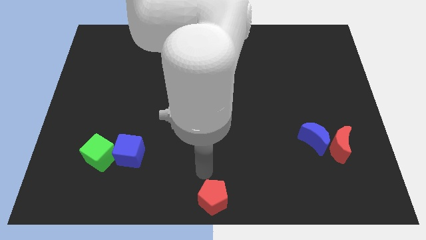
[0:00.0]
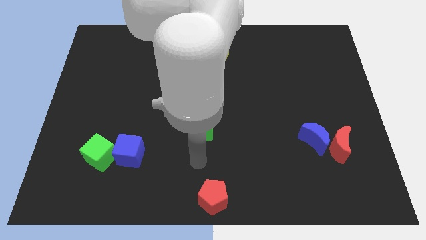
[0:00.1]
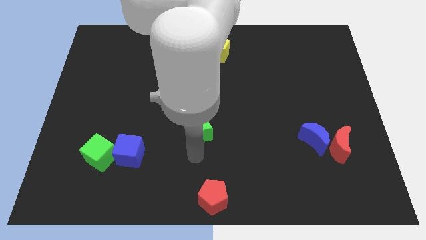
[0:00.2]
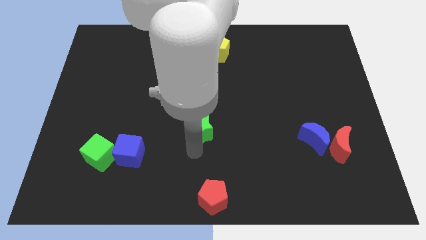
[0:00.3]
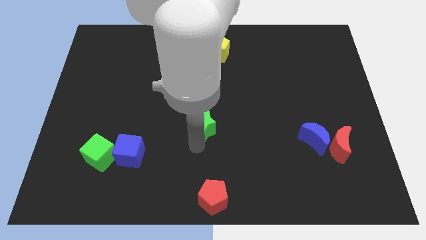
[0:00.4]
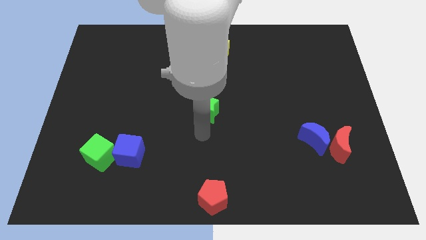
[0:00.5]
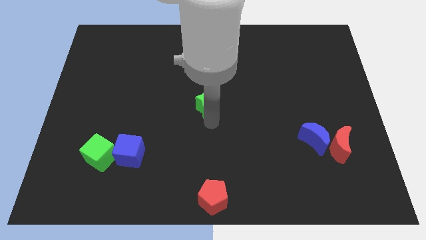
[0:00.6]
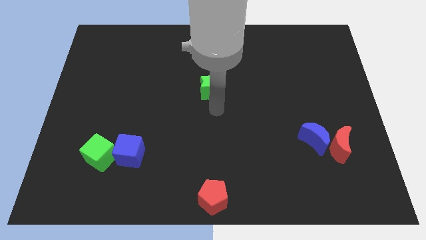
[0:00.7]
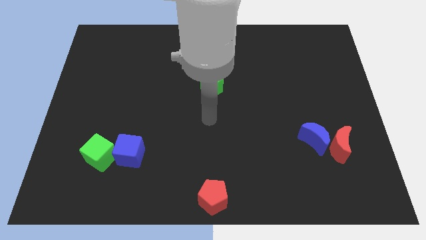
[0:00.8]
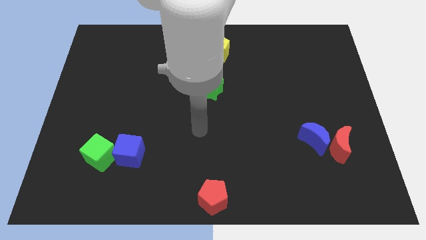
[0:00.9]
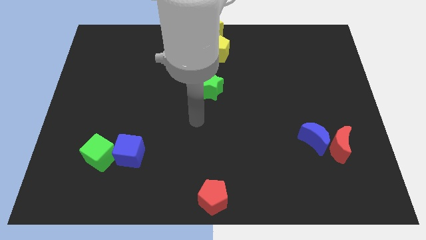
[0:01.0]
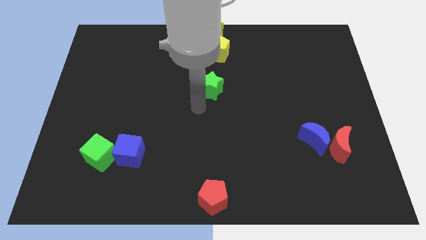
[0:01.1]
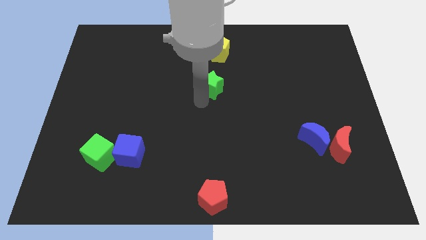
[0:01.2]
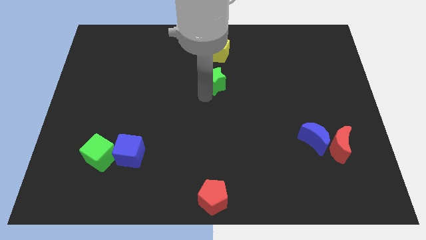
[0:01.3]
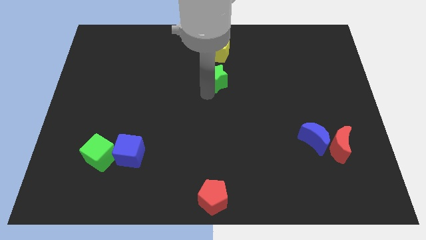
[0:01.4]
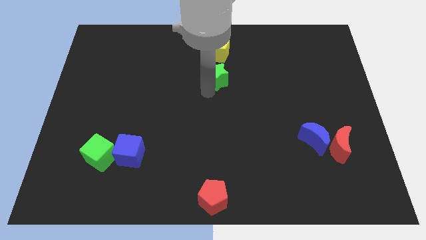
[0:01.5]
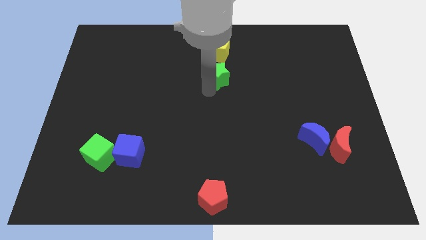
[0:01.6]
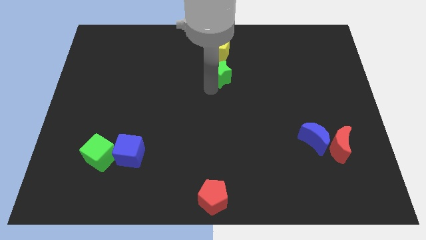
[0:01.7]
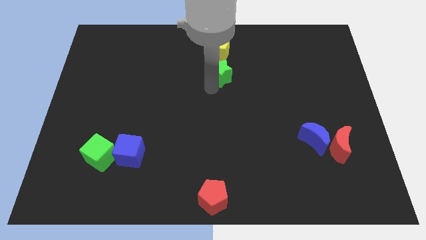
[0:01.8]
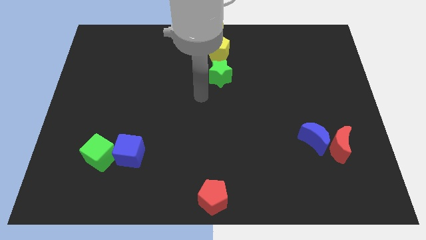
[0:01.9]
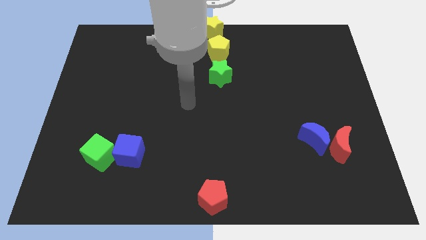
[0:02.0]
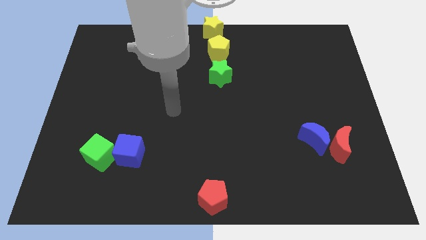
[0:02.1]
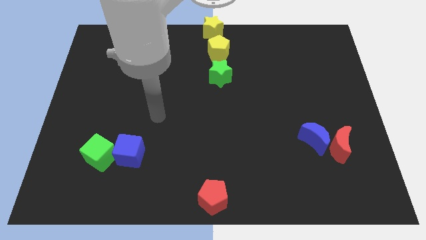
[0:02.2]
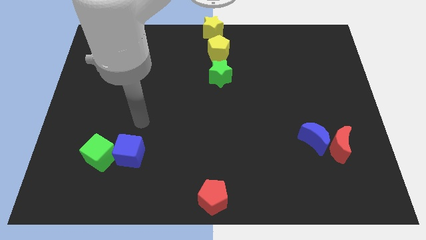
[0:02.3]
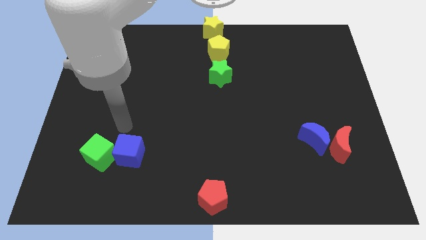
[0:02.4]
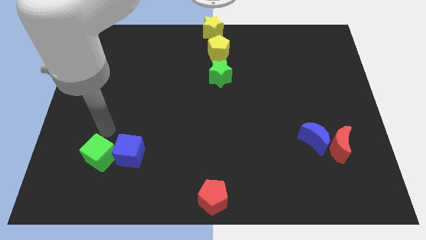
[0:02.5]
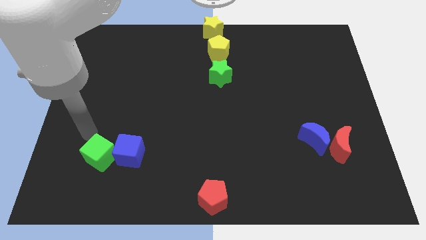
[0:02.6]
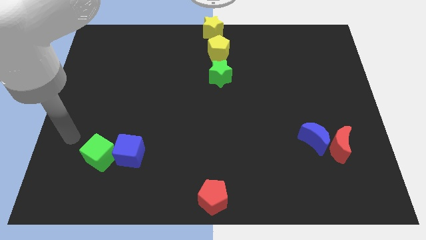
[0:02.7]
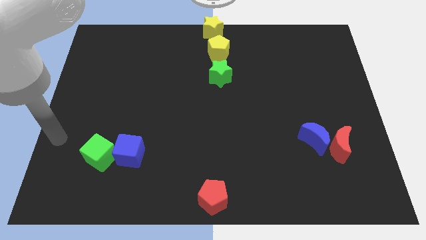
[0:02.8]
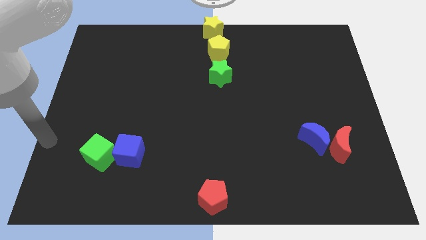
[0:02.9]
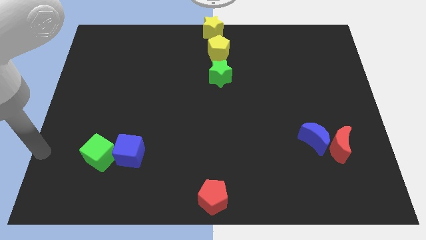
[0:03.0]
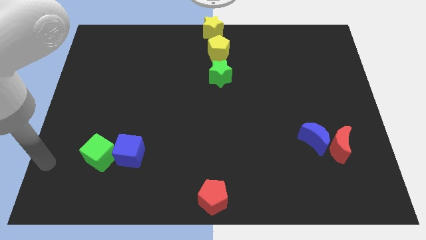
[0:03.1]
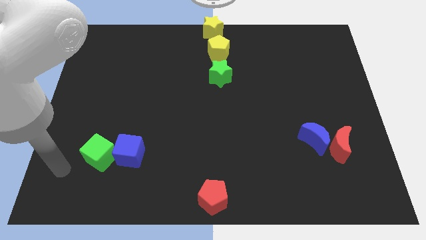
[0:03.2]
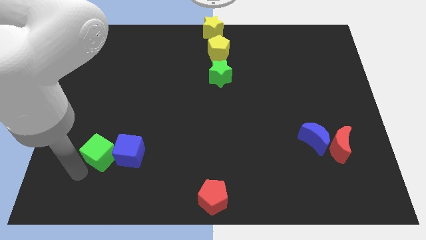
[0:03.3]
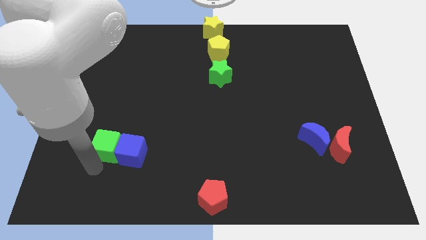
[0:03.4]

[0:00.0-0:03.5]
push the green star to the bottom of the yellow pentagon

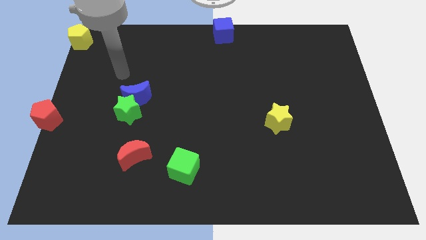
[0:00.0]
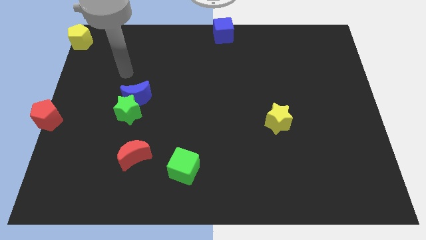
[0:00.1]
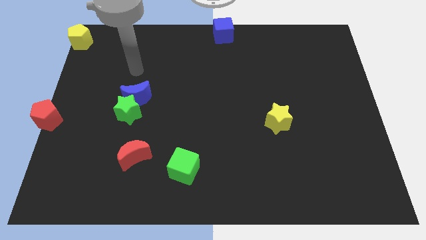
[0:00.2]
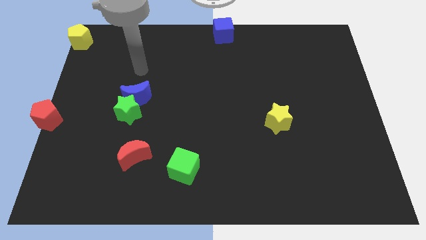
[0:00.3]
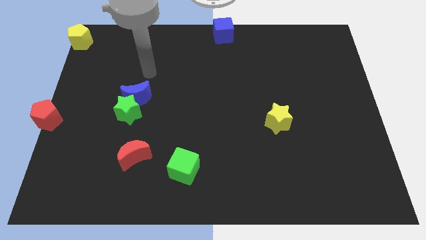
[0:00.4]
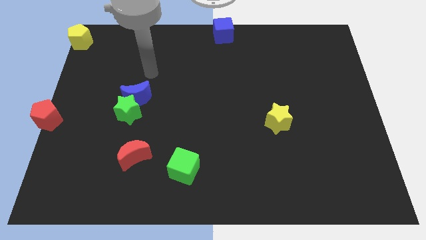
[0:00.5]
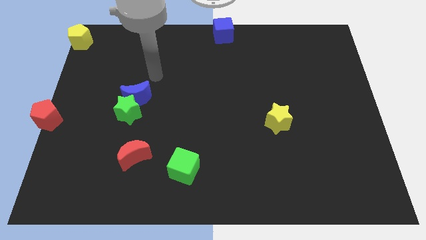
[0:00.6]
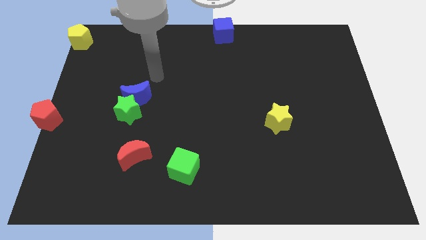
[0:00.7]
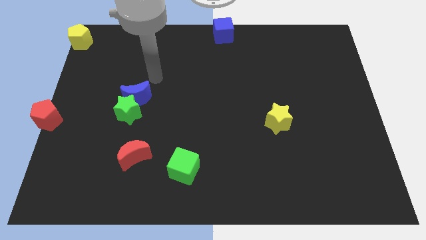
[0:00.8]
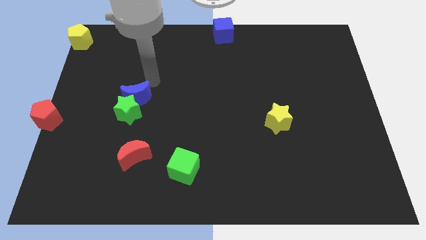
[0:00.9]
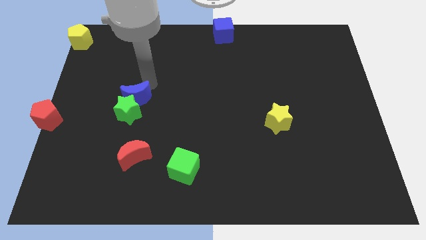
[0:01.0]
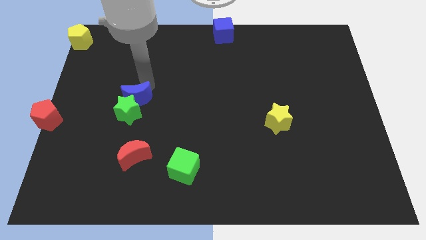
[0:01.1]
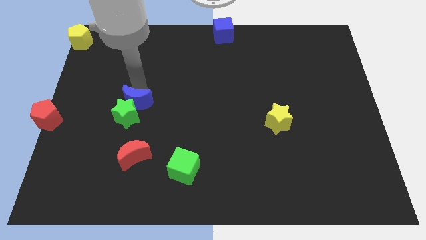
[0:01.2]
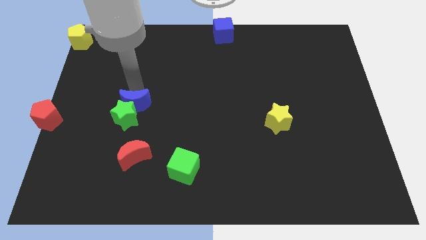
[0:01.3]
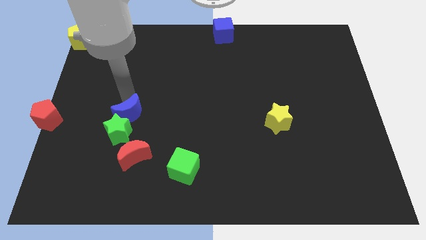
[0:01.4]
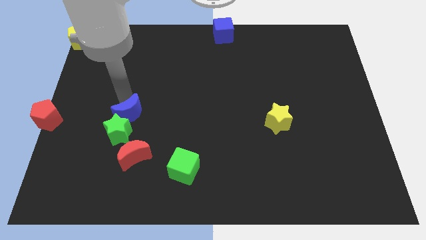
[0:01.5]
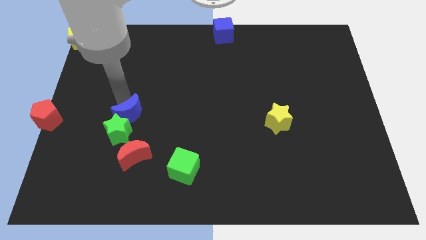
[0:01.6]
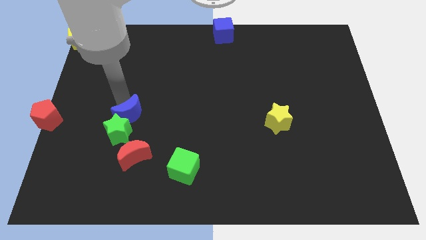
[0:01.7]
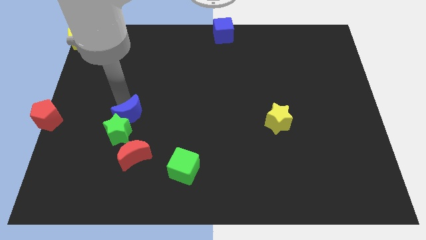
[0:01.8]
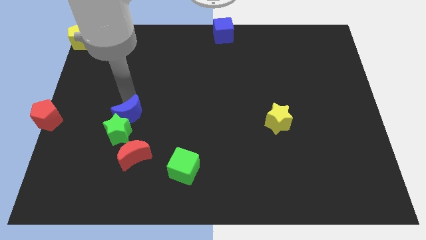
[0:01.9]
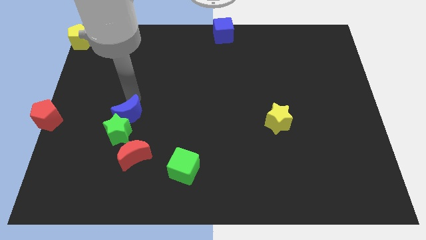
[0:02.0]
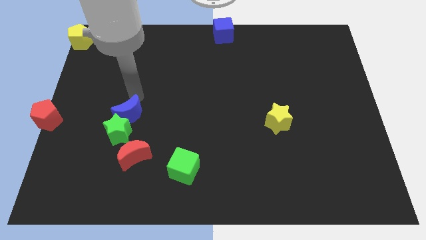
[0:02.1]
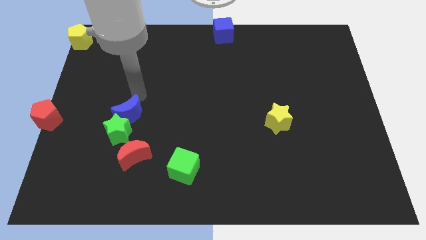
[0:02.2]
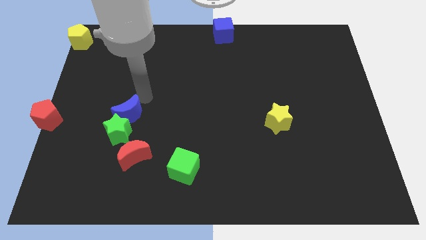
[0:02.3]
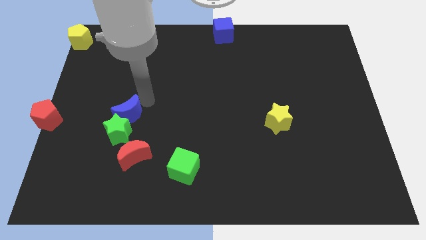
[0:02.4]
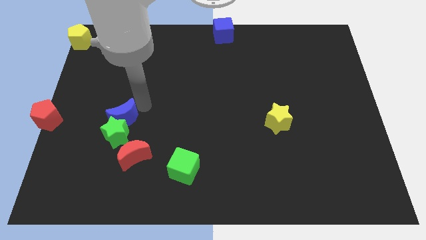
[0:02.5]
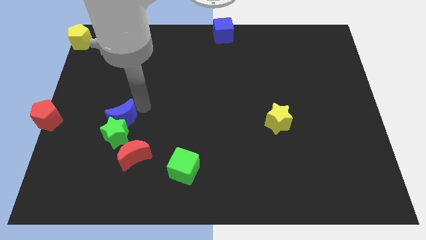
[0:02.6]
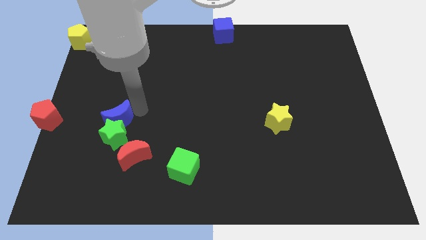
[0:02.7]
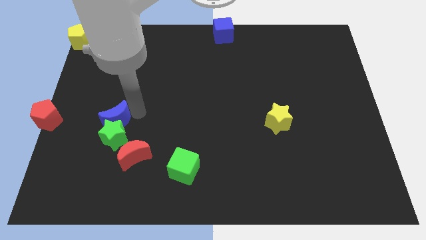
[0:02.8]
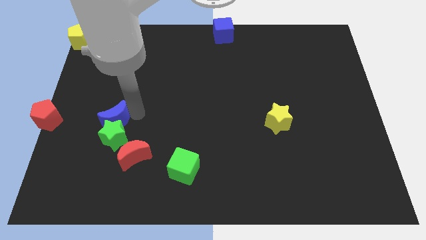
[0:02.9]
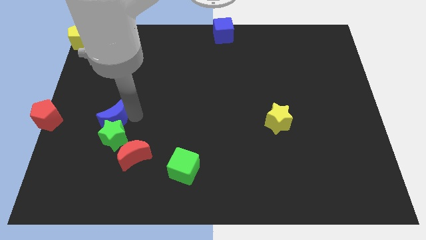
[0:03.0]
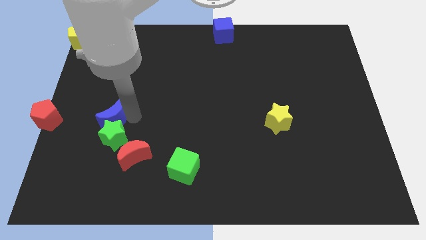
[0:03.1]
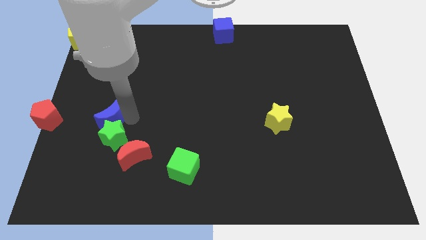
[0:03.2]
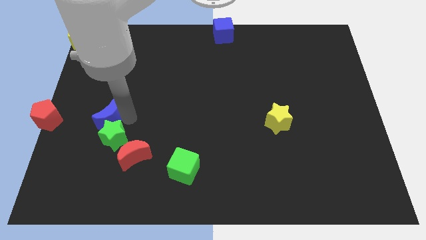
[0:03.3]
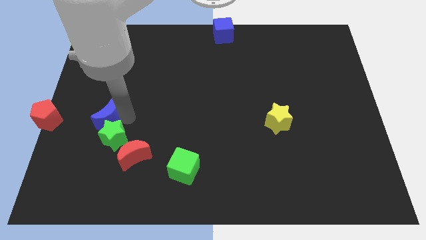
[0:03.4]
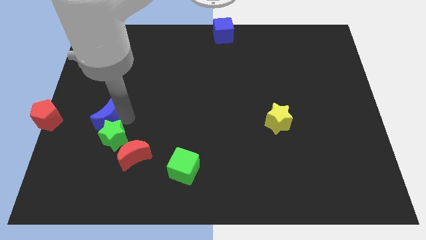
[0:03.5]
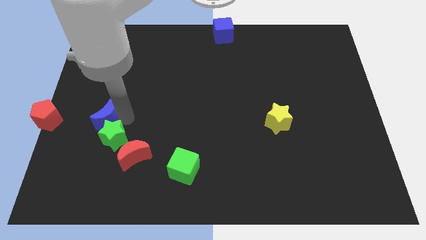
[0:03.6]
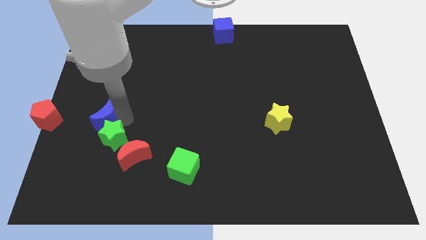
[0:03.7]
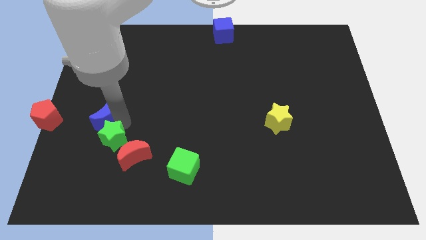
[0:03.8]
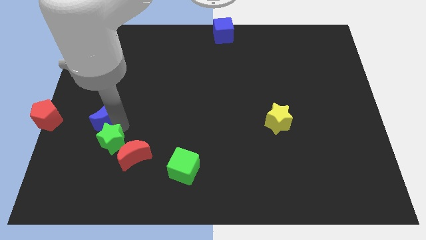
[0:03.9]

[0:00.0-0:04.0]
put the blue moon at the right side of the red pentagon

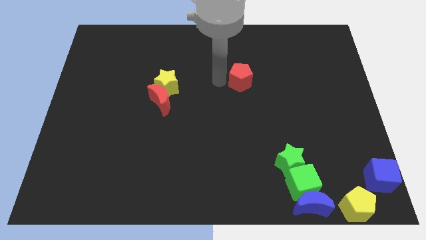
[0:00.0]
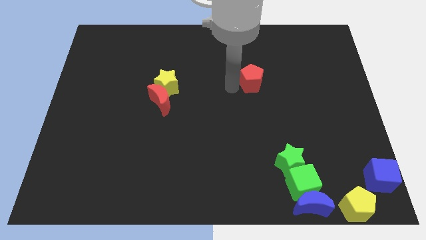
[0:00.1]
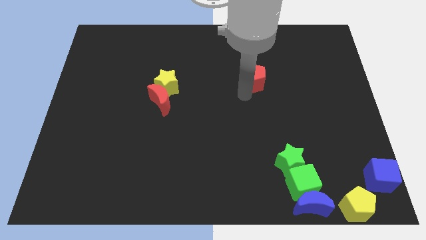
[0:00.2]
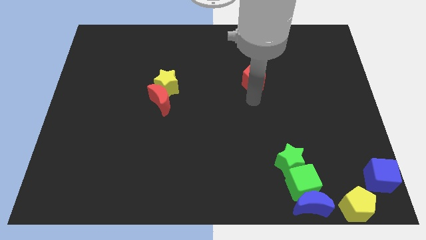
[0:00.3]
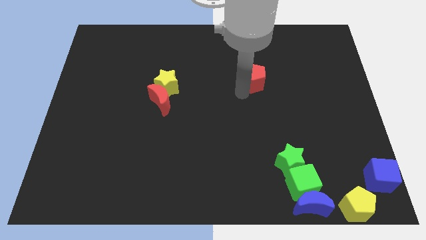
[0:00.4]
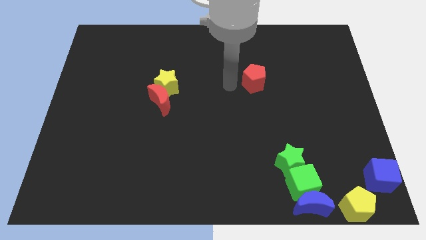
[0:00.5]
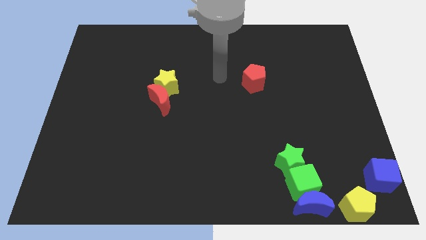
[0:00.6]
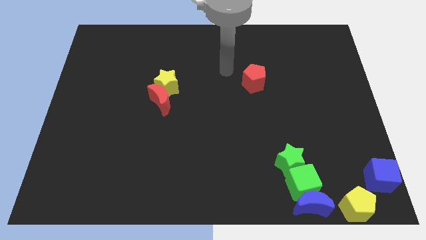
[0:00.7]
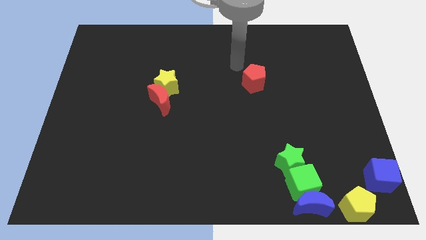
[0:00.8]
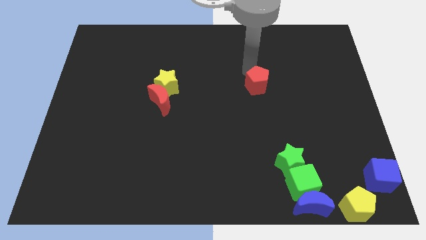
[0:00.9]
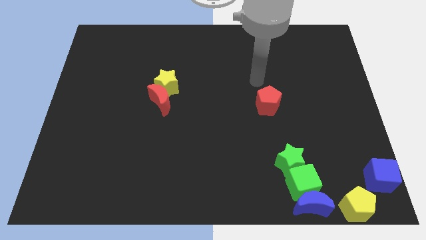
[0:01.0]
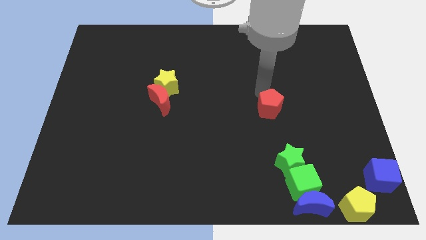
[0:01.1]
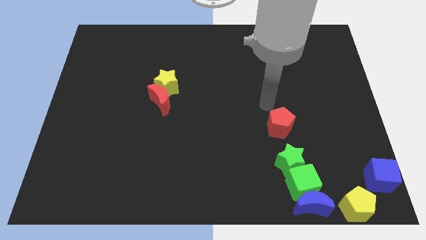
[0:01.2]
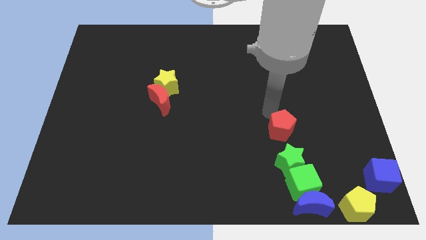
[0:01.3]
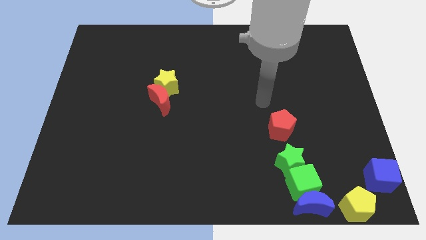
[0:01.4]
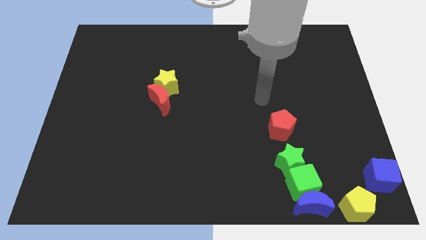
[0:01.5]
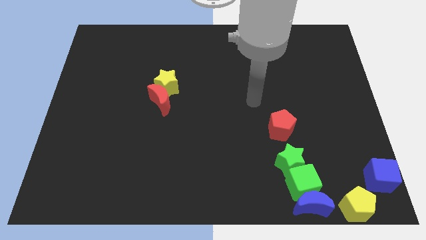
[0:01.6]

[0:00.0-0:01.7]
place the red pentagon vertically above the green star
